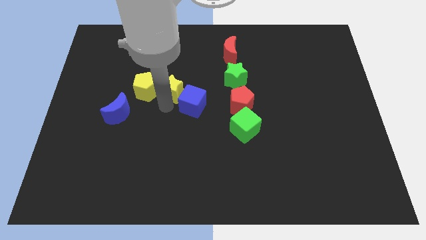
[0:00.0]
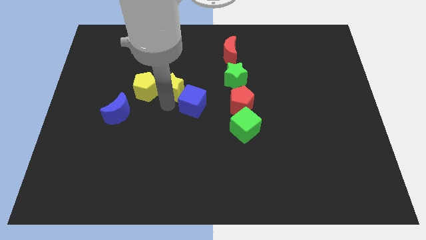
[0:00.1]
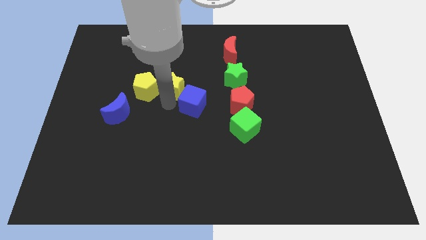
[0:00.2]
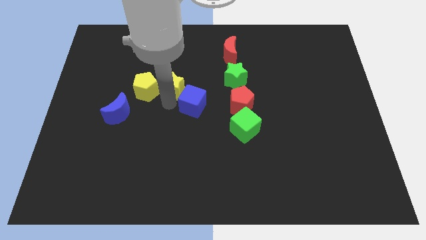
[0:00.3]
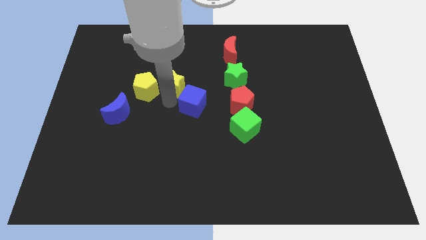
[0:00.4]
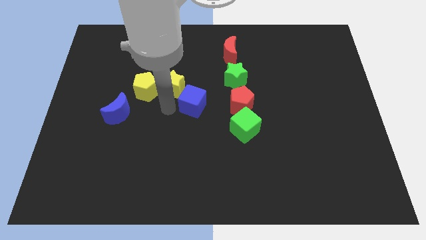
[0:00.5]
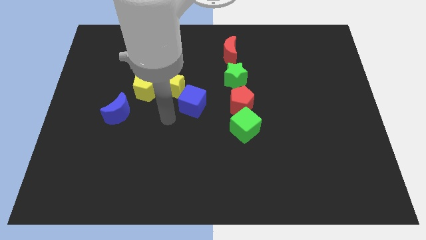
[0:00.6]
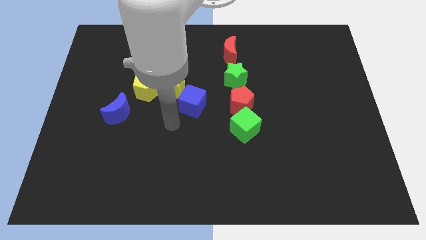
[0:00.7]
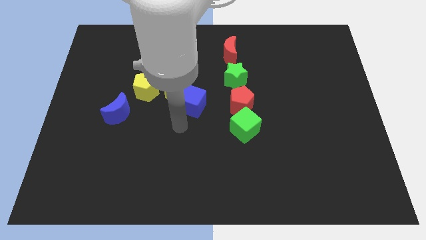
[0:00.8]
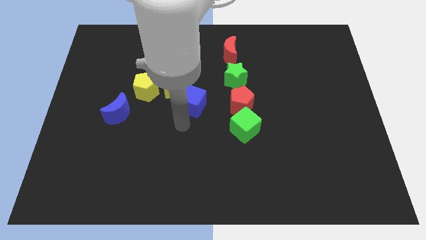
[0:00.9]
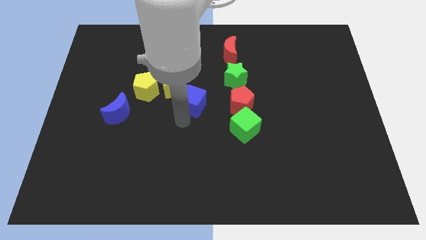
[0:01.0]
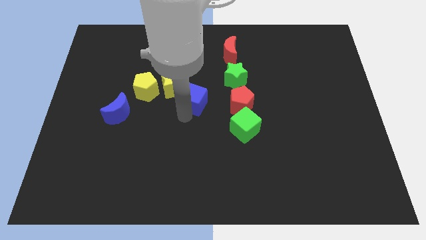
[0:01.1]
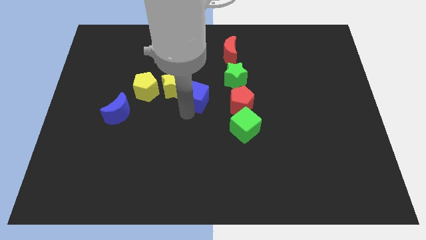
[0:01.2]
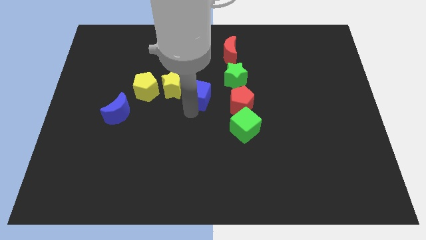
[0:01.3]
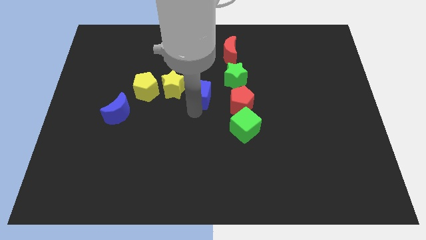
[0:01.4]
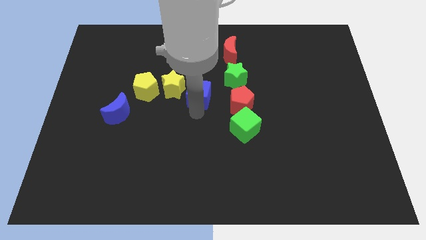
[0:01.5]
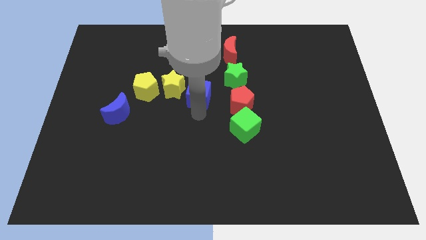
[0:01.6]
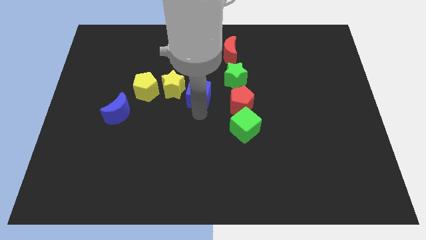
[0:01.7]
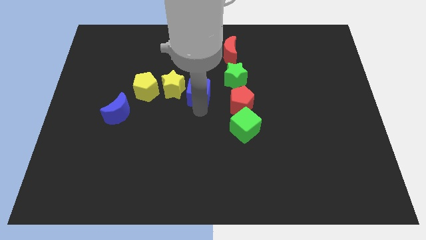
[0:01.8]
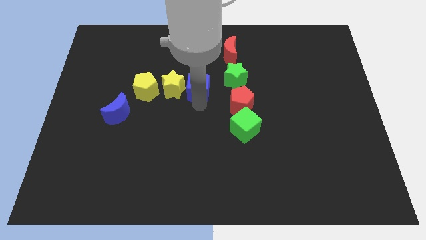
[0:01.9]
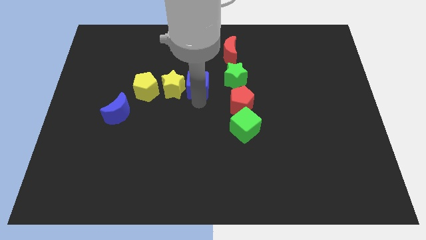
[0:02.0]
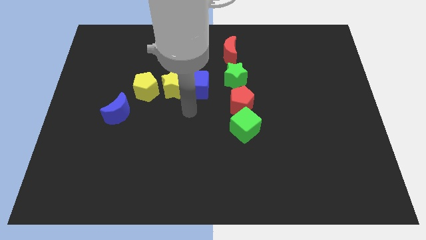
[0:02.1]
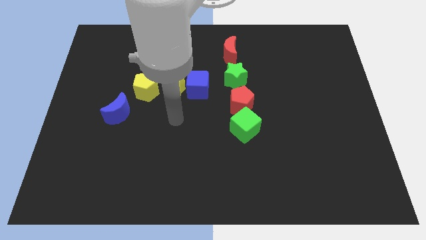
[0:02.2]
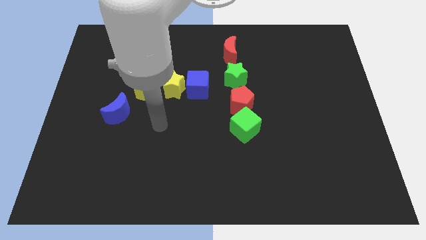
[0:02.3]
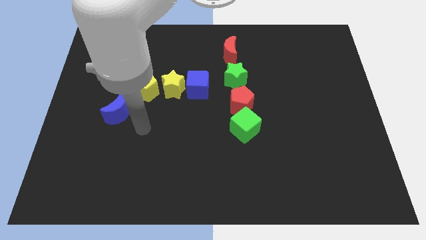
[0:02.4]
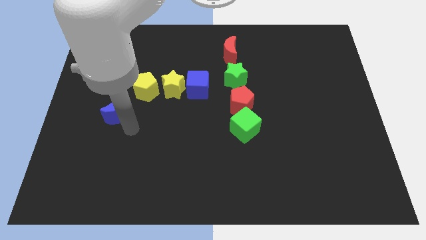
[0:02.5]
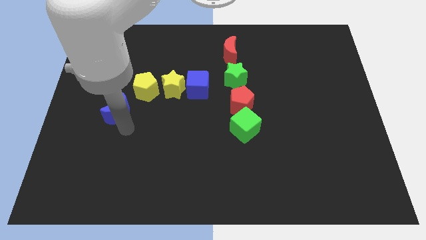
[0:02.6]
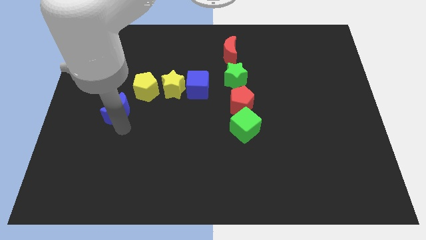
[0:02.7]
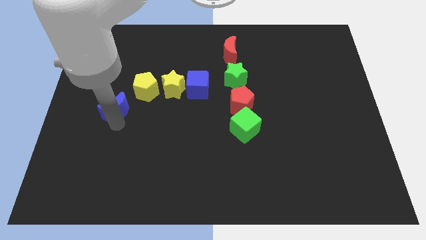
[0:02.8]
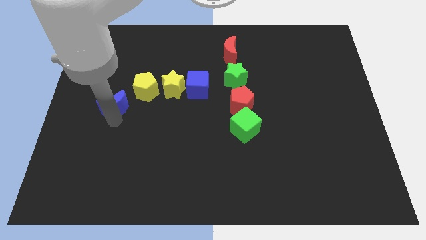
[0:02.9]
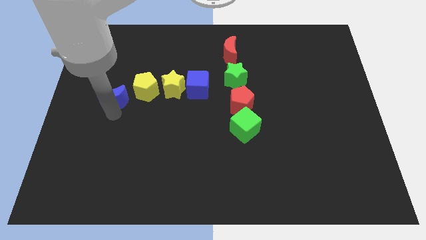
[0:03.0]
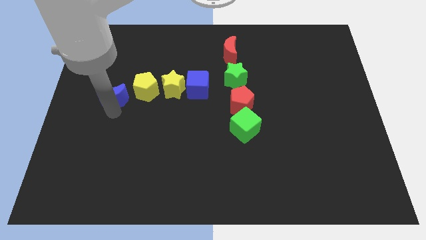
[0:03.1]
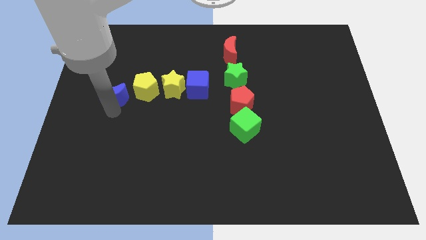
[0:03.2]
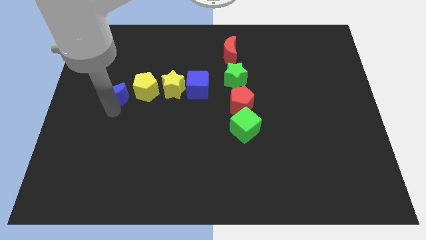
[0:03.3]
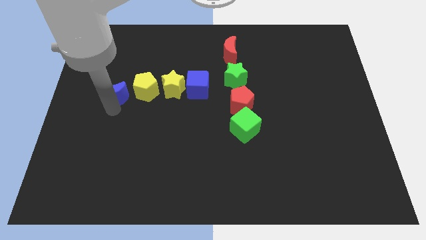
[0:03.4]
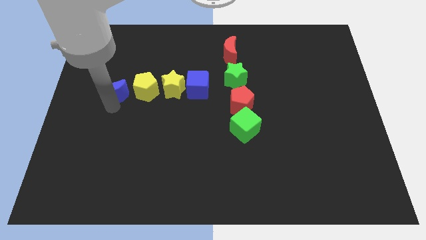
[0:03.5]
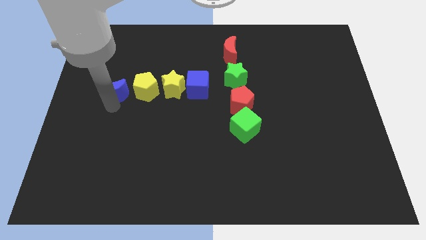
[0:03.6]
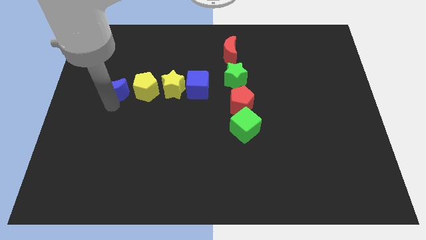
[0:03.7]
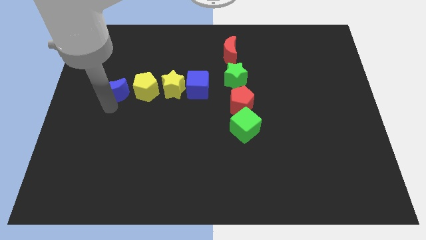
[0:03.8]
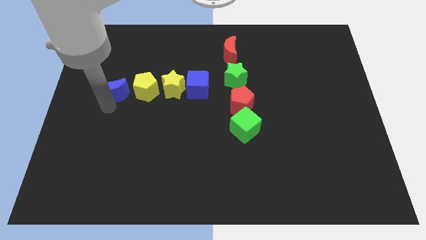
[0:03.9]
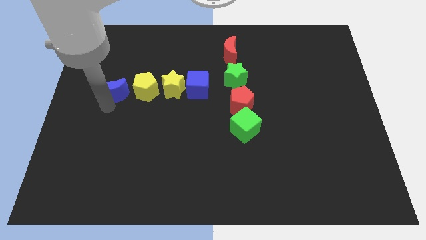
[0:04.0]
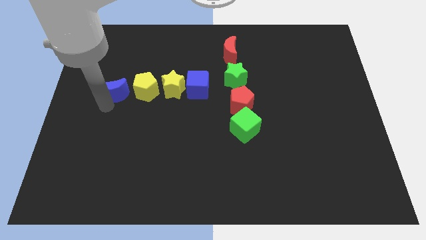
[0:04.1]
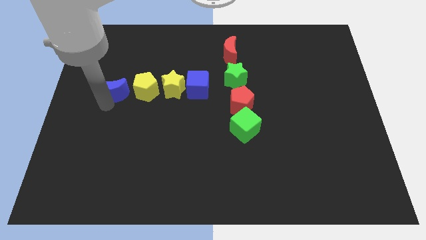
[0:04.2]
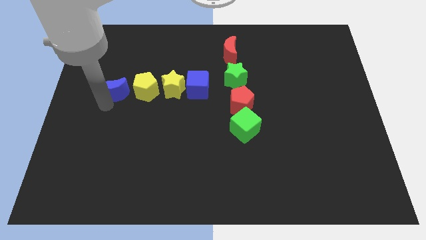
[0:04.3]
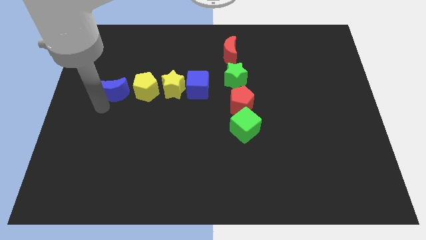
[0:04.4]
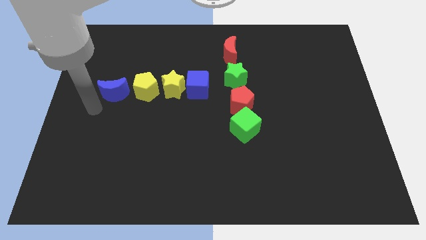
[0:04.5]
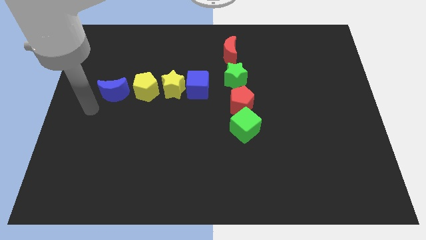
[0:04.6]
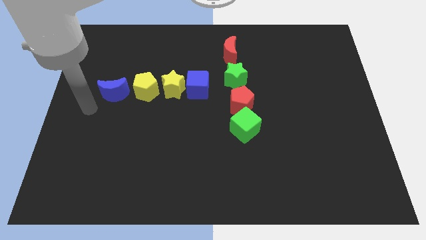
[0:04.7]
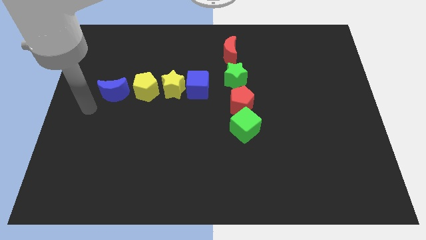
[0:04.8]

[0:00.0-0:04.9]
adjust all the yellow and blue blocks to make a horizontal line of blocks

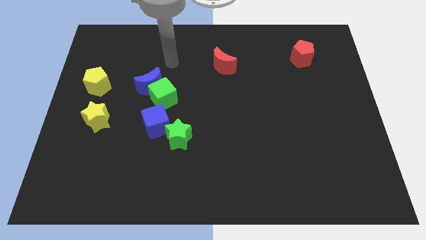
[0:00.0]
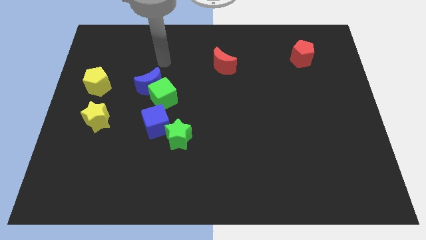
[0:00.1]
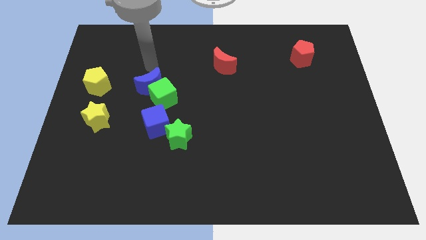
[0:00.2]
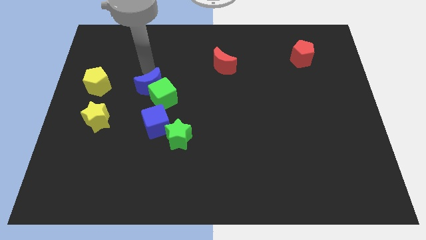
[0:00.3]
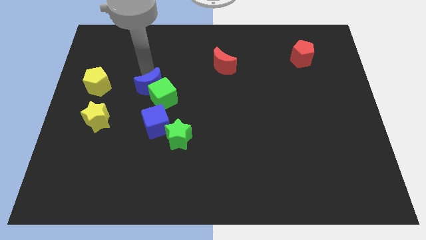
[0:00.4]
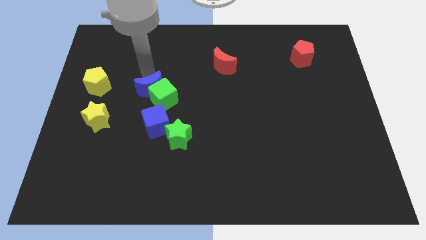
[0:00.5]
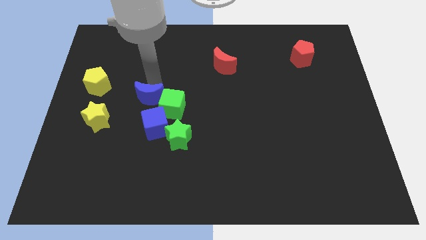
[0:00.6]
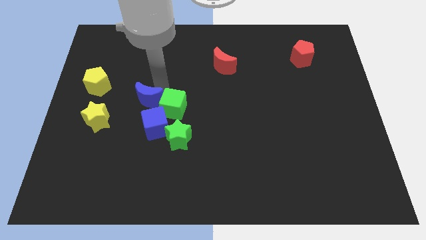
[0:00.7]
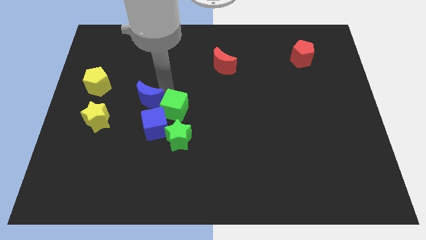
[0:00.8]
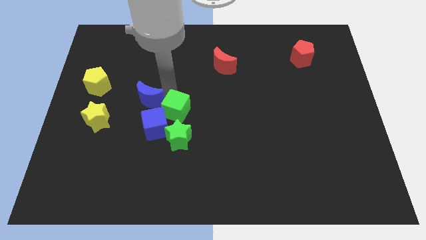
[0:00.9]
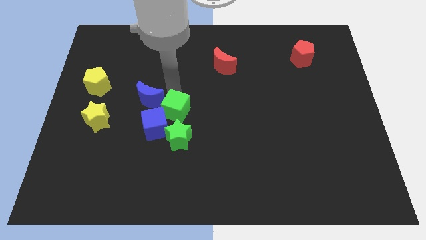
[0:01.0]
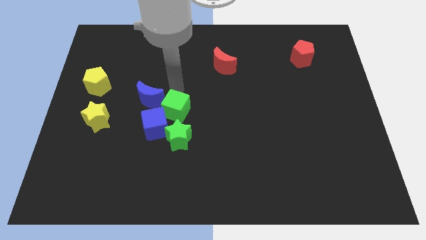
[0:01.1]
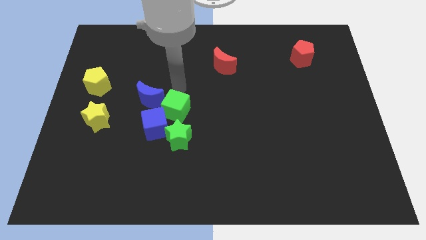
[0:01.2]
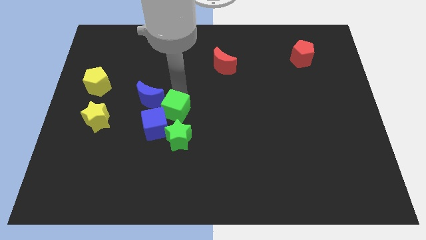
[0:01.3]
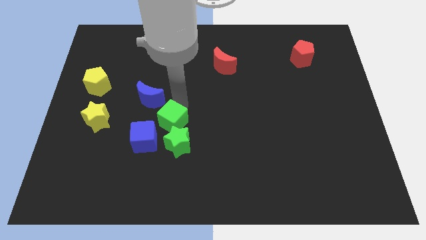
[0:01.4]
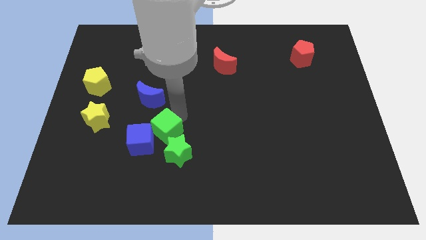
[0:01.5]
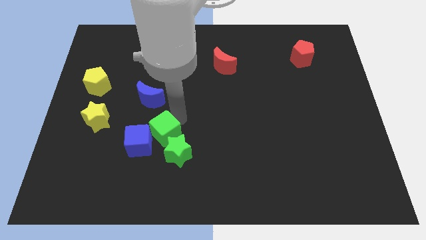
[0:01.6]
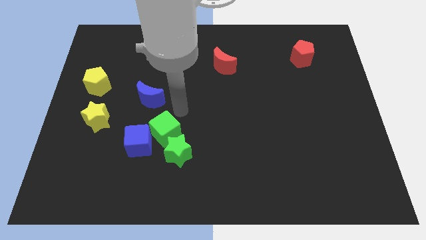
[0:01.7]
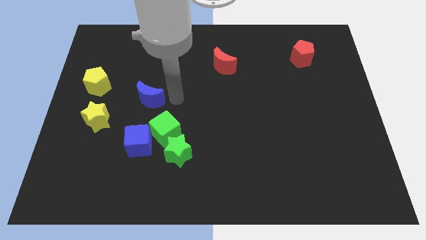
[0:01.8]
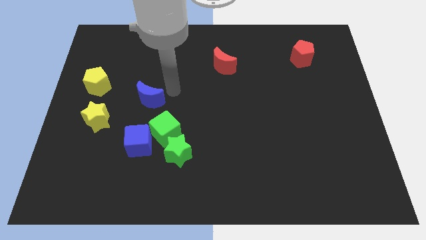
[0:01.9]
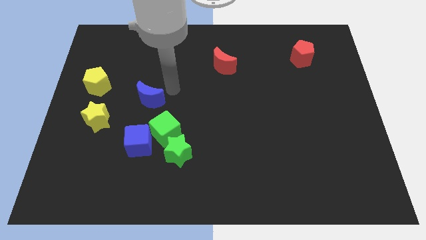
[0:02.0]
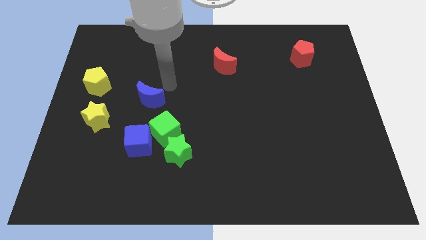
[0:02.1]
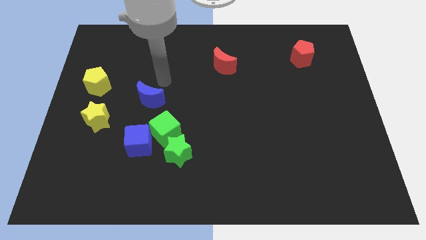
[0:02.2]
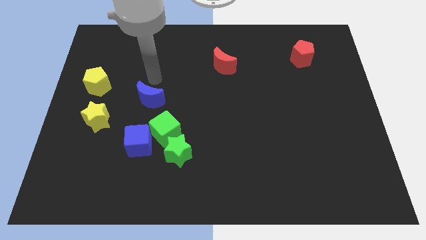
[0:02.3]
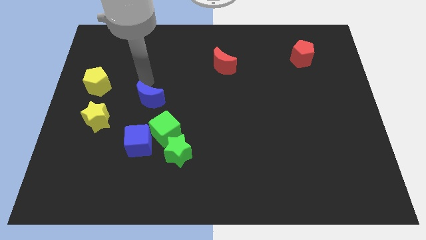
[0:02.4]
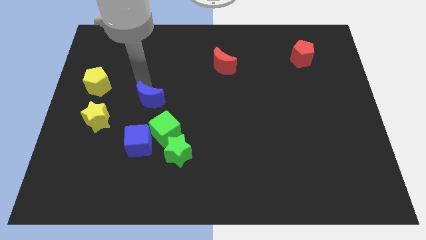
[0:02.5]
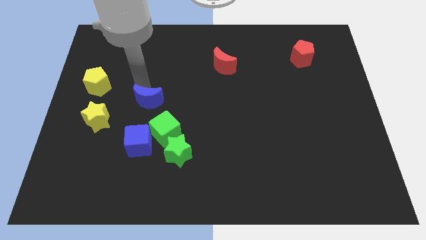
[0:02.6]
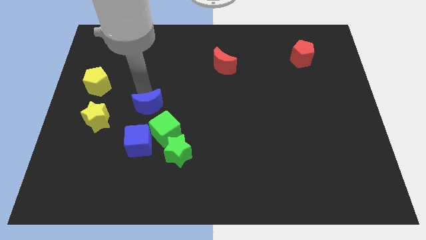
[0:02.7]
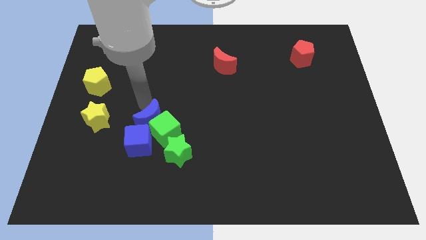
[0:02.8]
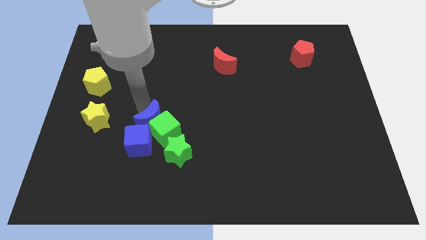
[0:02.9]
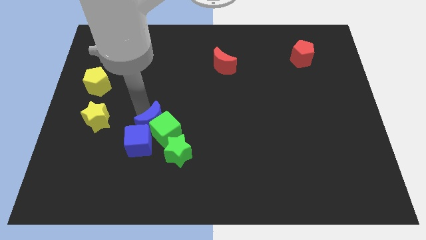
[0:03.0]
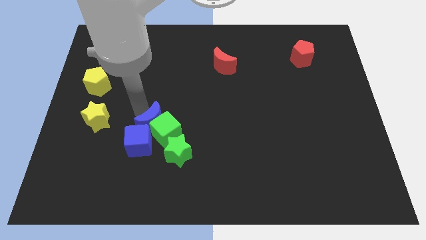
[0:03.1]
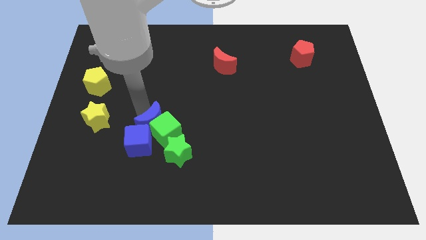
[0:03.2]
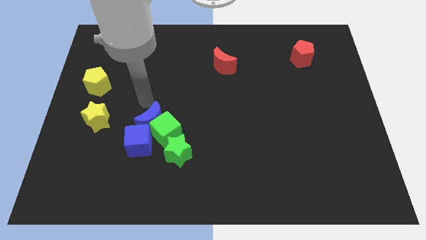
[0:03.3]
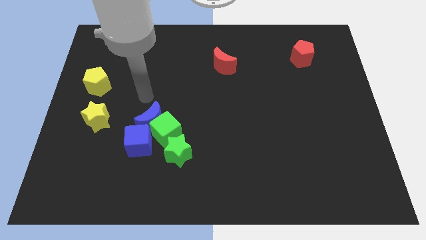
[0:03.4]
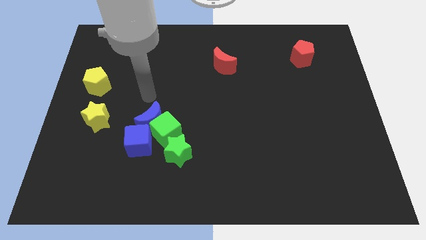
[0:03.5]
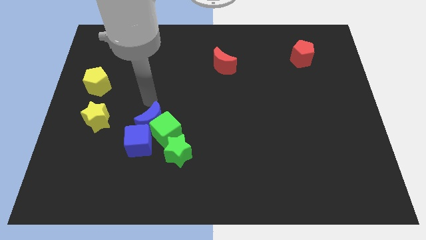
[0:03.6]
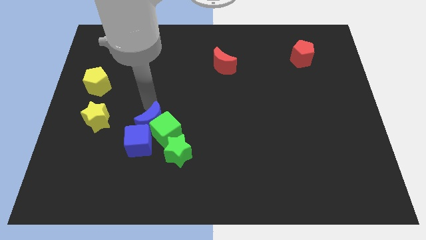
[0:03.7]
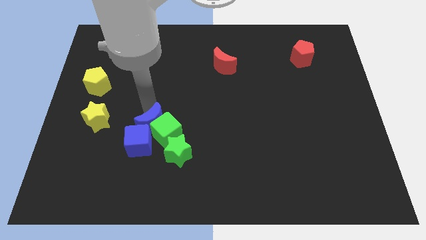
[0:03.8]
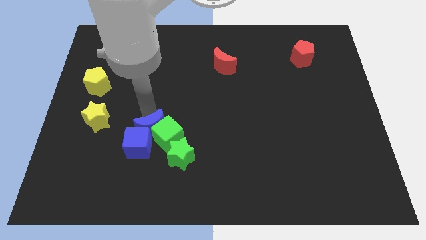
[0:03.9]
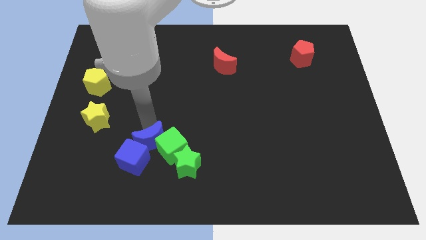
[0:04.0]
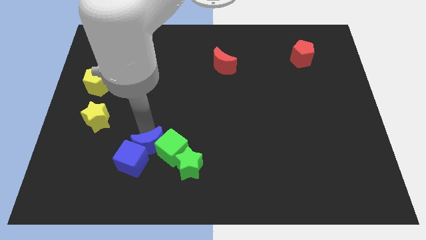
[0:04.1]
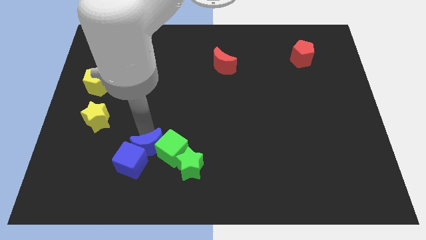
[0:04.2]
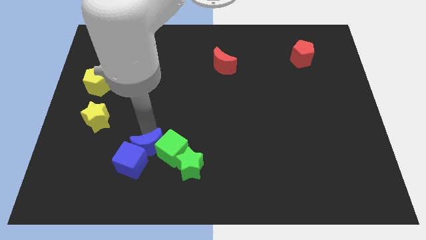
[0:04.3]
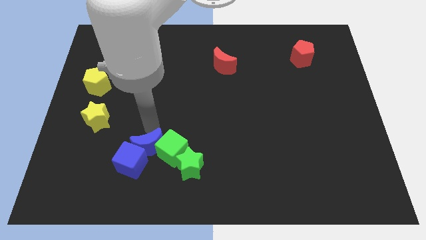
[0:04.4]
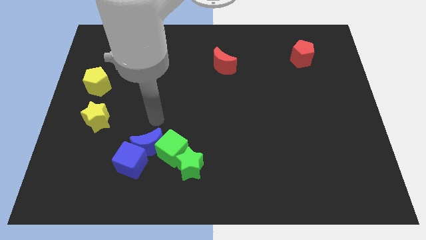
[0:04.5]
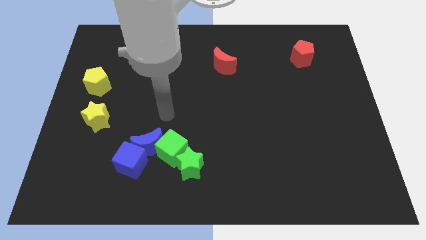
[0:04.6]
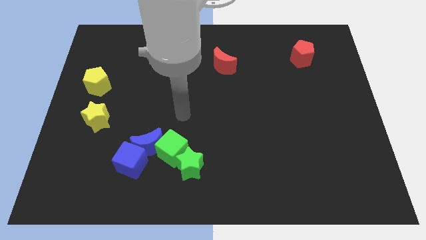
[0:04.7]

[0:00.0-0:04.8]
push the group of blocks with the blue crescent
